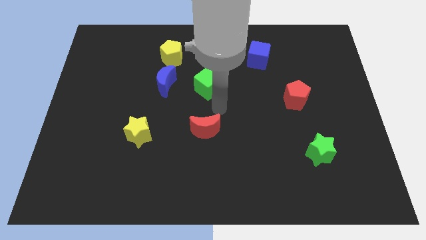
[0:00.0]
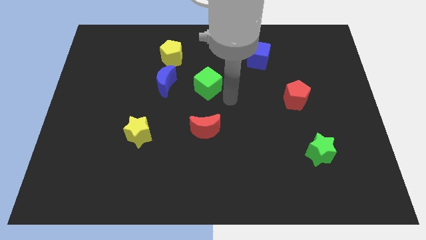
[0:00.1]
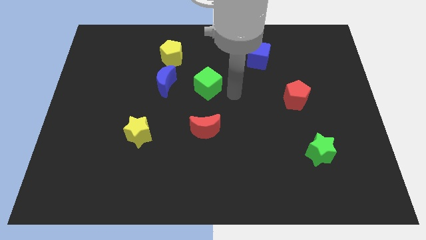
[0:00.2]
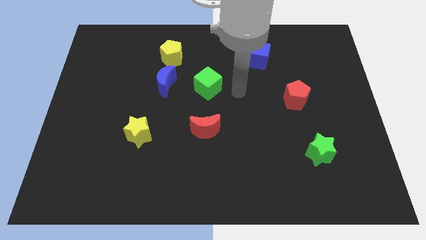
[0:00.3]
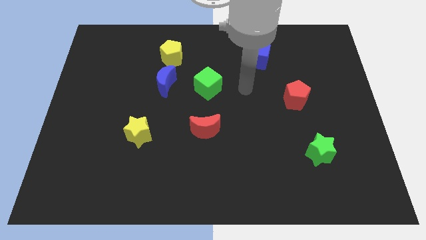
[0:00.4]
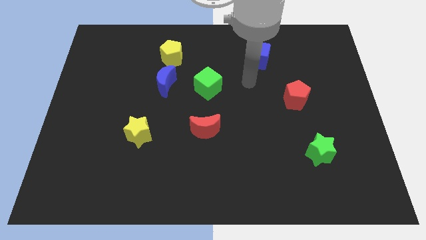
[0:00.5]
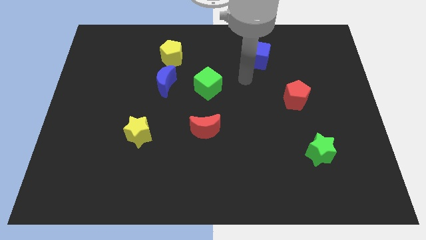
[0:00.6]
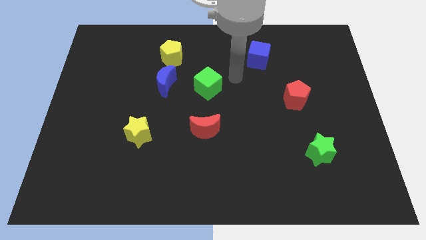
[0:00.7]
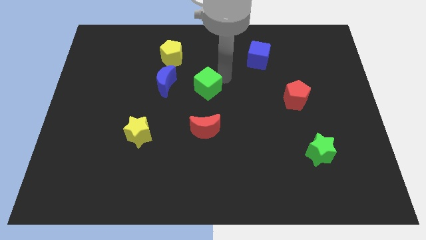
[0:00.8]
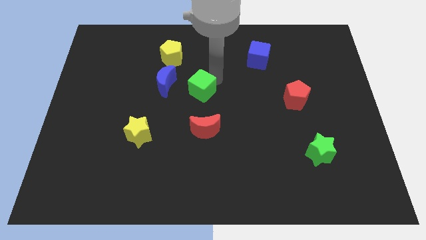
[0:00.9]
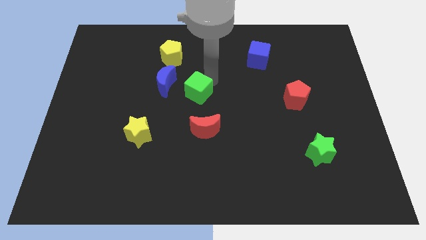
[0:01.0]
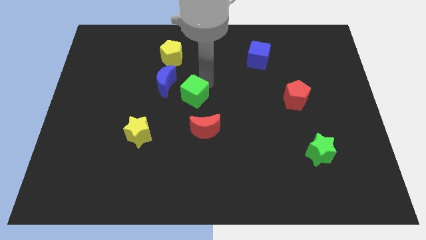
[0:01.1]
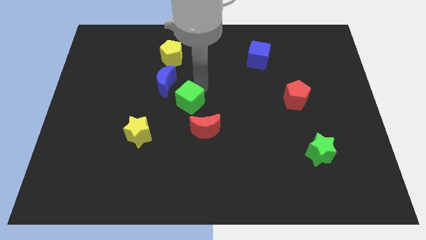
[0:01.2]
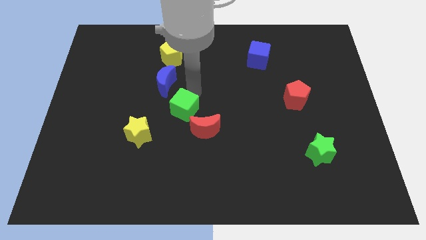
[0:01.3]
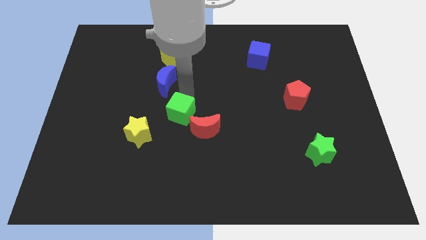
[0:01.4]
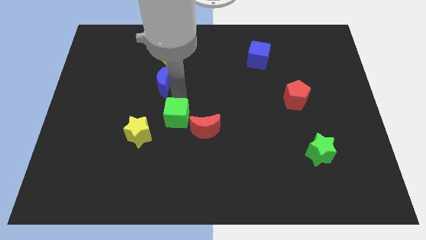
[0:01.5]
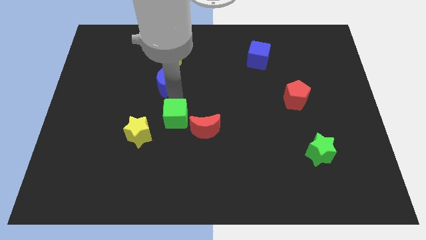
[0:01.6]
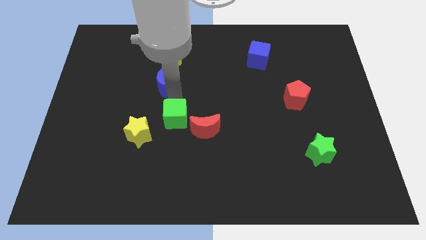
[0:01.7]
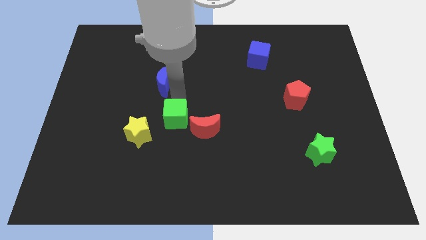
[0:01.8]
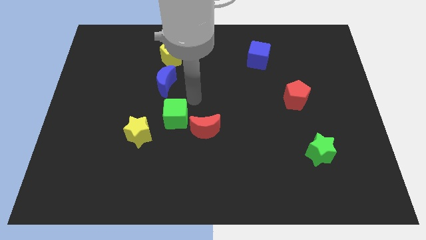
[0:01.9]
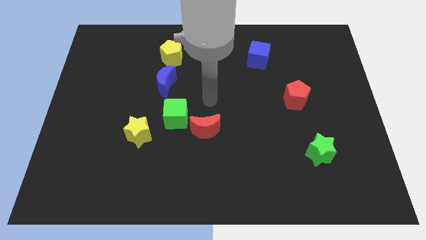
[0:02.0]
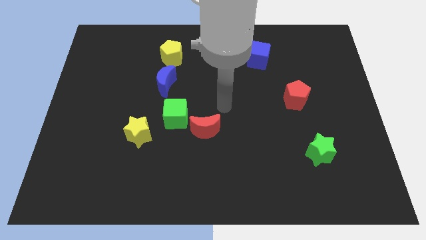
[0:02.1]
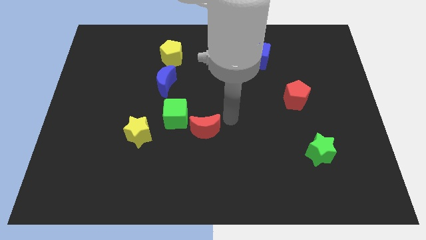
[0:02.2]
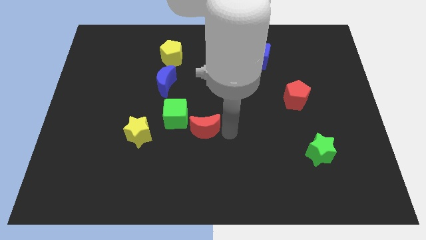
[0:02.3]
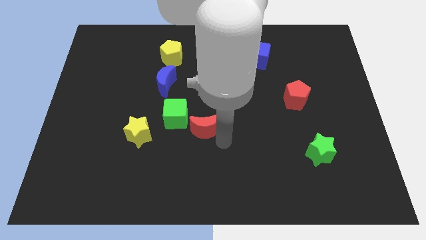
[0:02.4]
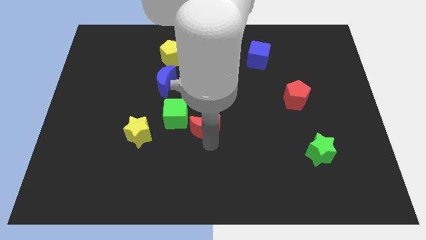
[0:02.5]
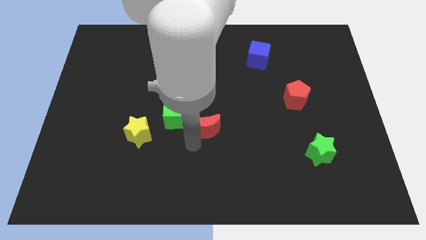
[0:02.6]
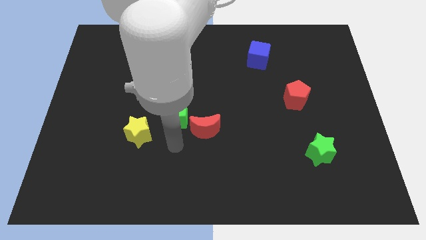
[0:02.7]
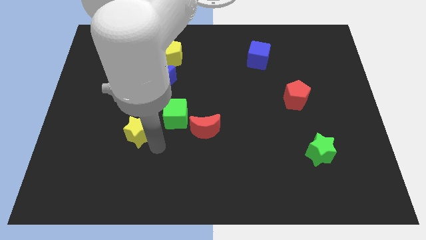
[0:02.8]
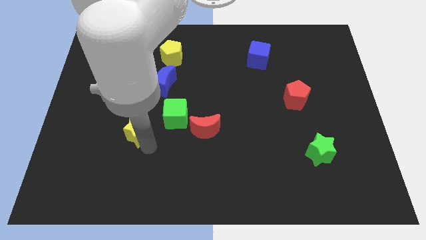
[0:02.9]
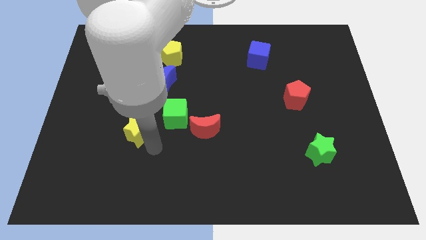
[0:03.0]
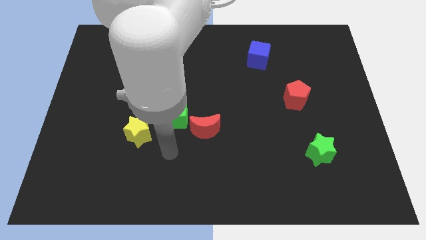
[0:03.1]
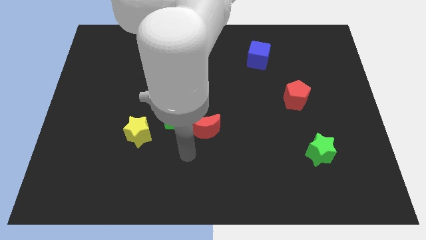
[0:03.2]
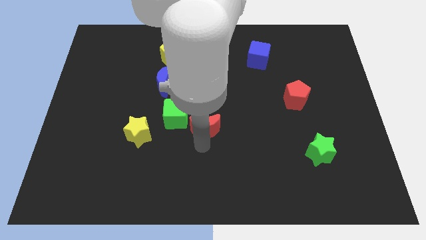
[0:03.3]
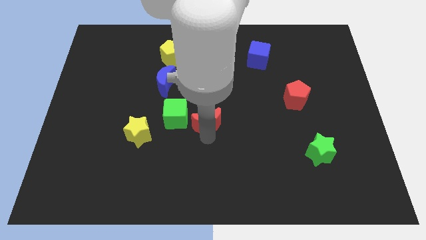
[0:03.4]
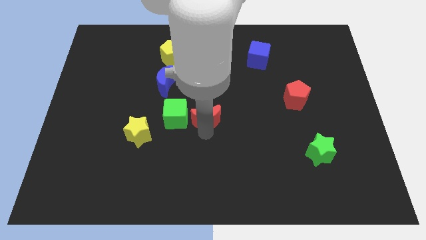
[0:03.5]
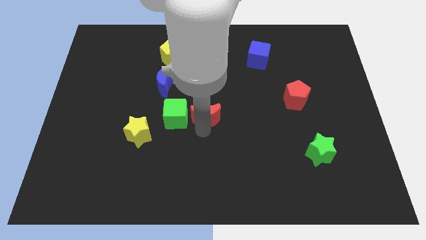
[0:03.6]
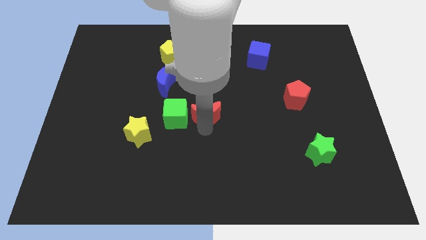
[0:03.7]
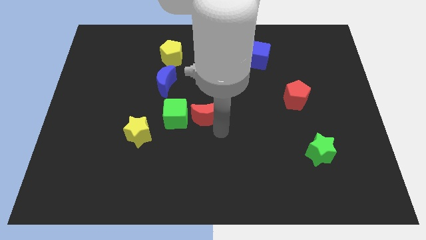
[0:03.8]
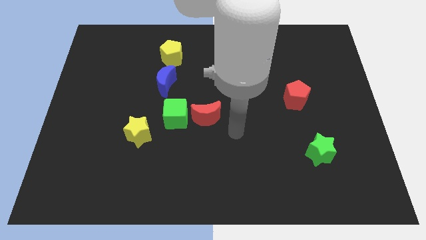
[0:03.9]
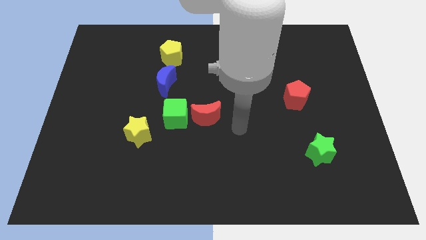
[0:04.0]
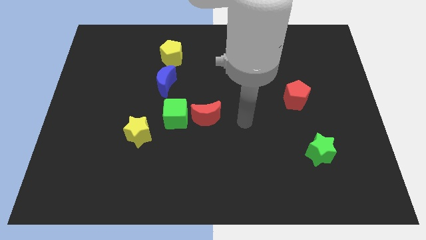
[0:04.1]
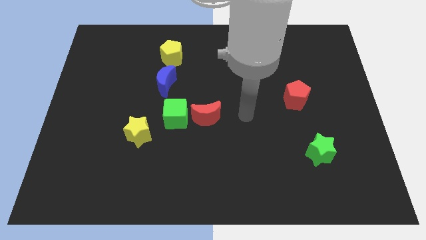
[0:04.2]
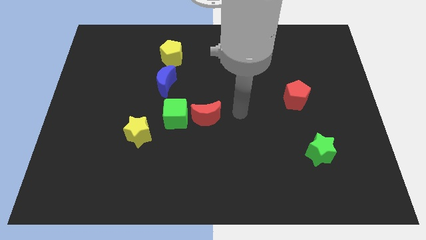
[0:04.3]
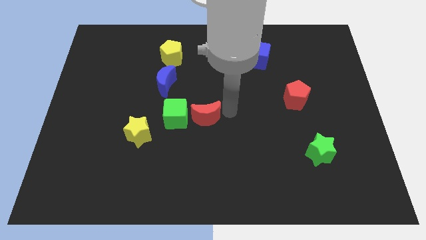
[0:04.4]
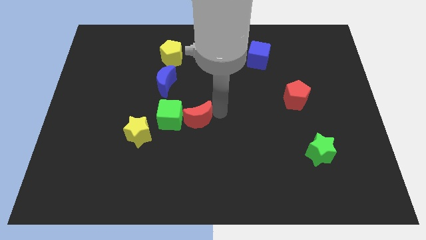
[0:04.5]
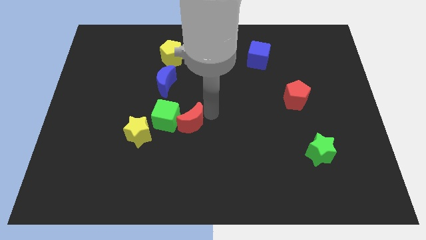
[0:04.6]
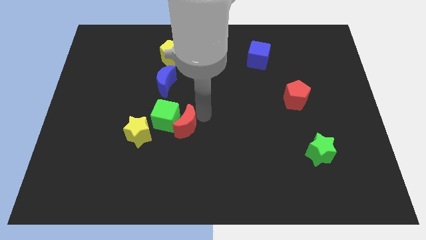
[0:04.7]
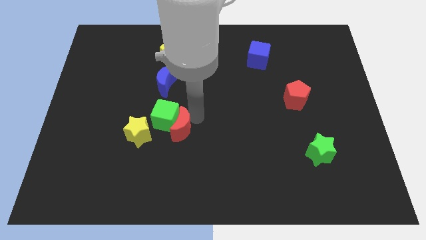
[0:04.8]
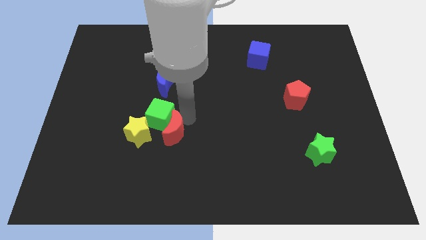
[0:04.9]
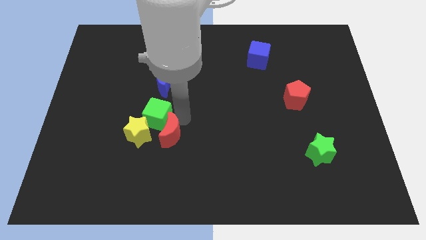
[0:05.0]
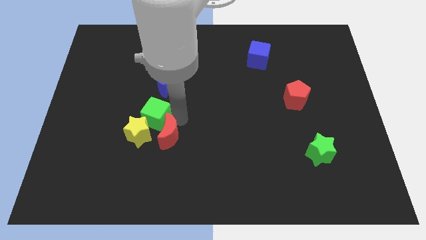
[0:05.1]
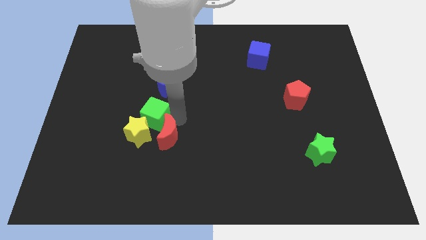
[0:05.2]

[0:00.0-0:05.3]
place the red crescent and green cube below the blue crescent

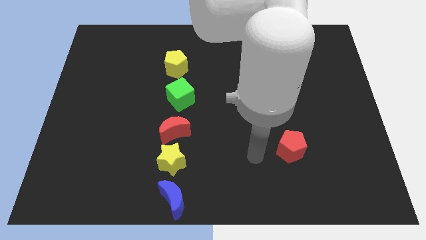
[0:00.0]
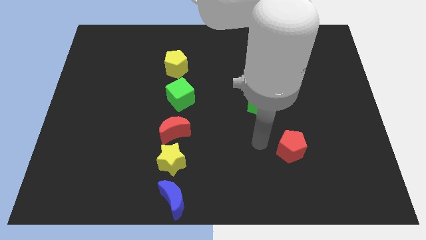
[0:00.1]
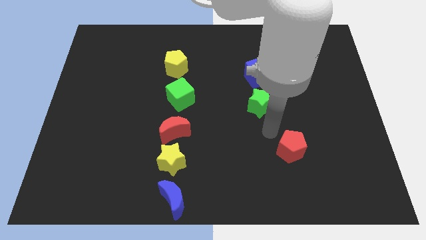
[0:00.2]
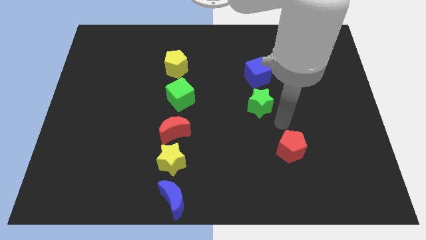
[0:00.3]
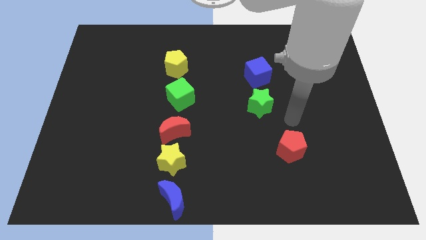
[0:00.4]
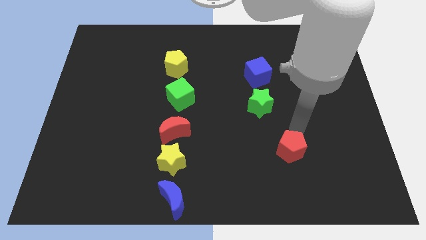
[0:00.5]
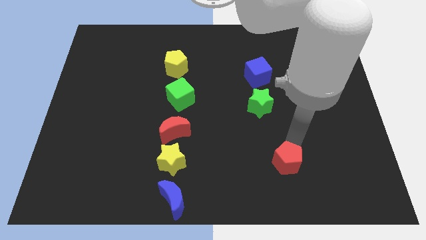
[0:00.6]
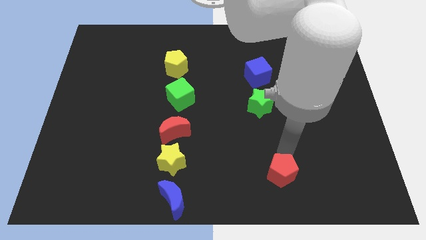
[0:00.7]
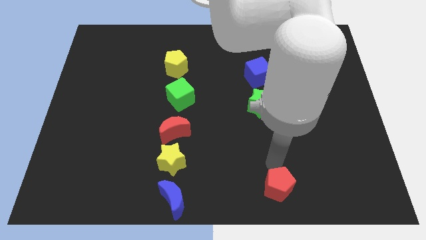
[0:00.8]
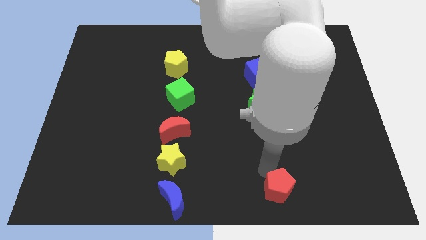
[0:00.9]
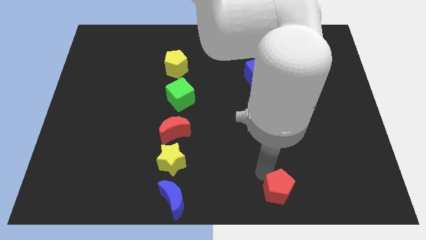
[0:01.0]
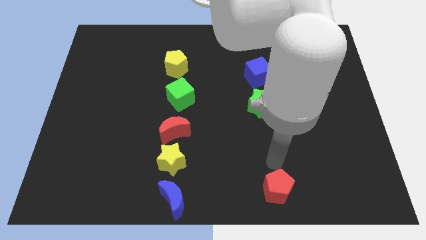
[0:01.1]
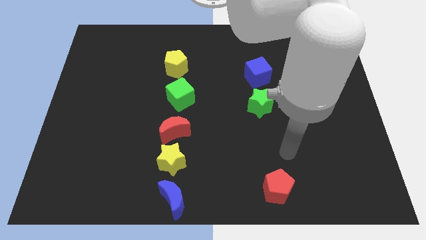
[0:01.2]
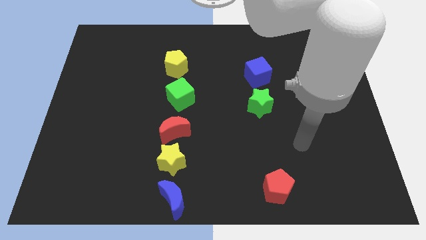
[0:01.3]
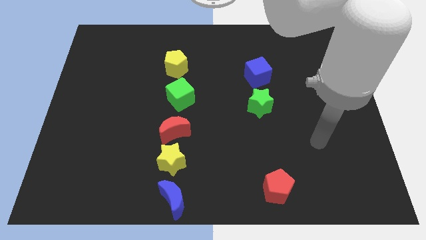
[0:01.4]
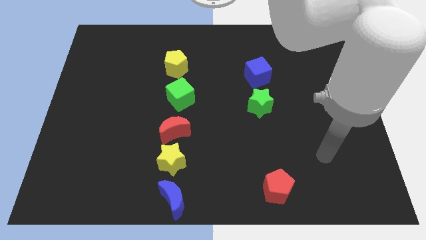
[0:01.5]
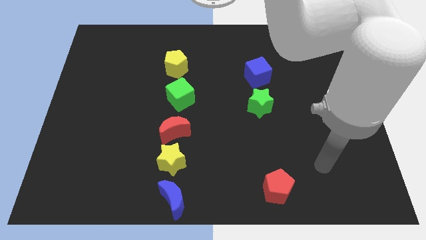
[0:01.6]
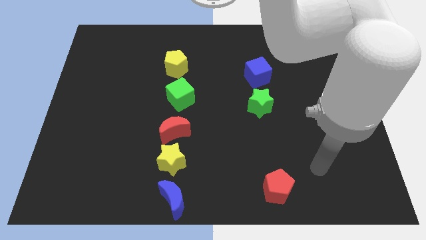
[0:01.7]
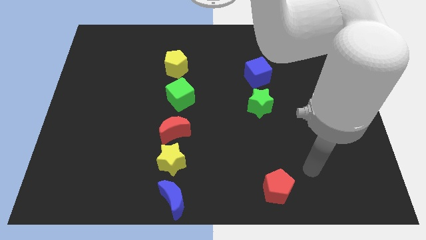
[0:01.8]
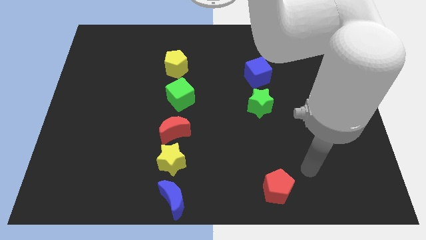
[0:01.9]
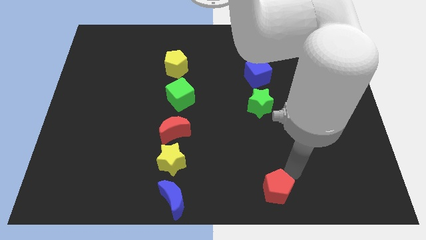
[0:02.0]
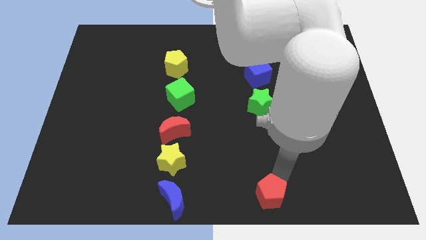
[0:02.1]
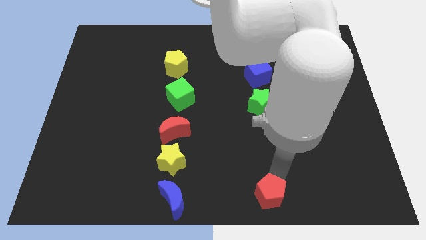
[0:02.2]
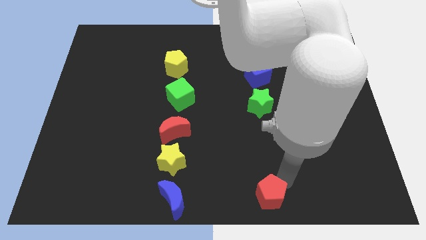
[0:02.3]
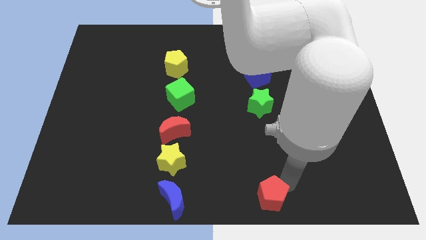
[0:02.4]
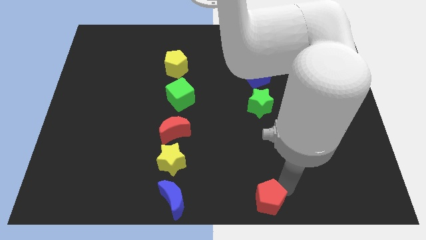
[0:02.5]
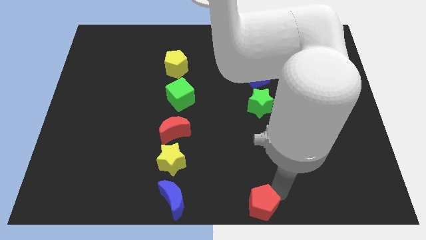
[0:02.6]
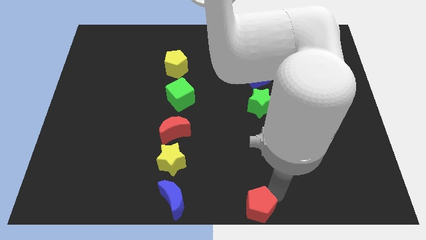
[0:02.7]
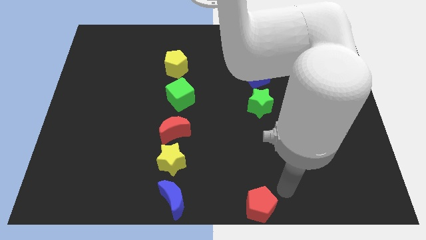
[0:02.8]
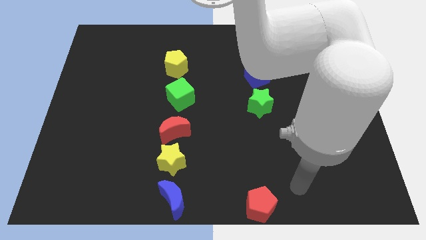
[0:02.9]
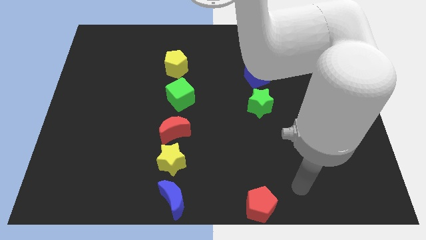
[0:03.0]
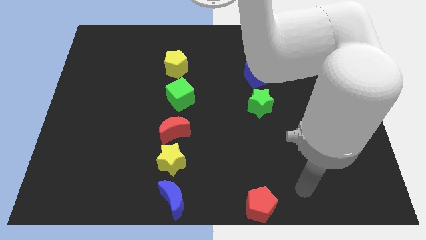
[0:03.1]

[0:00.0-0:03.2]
place the red pentagon parallel to blue moon

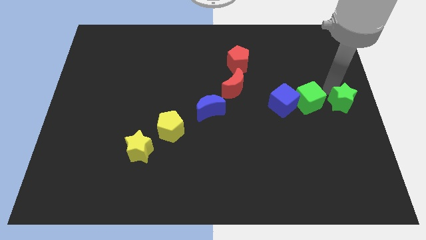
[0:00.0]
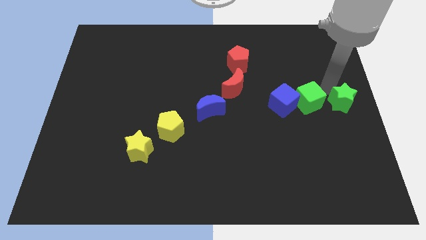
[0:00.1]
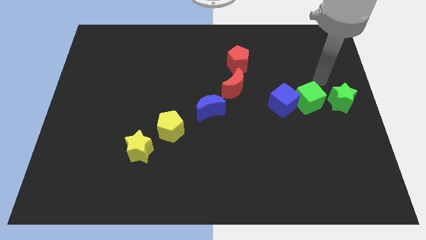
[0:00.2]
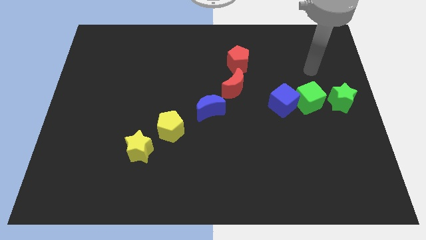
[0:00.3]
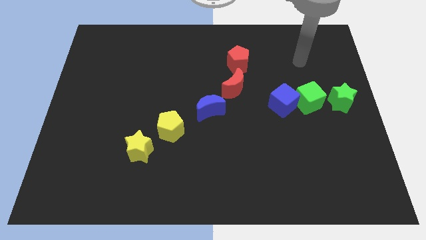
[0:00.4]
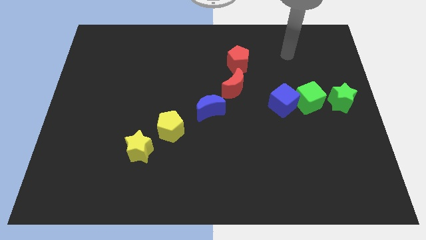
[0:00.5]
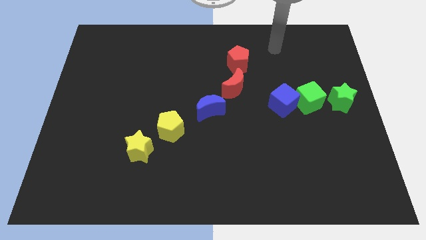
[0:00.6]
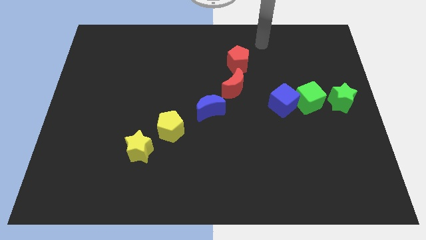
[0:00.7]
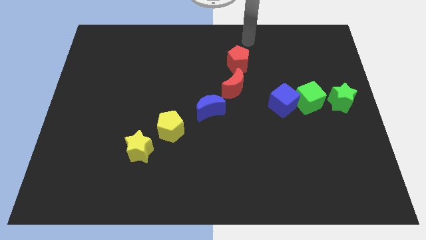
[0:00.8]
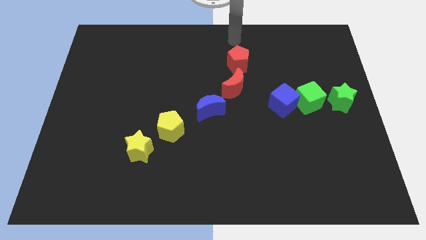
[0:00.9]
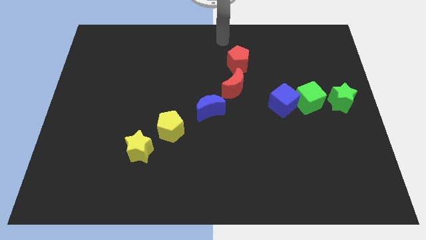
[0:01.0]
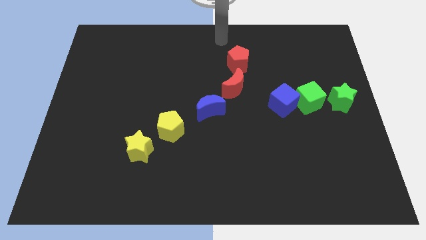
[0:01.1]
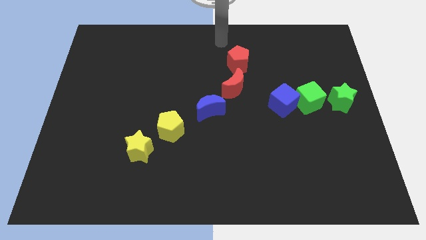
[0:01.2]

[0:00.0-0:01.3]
move your arm away from the green star
